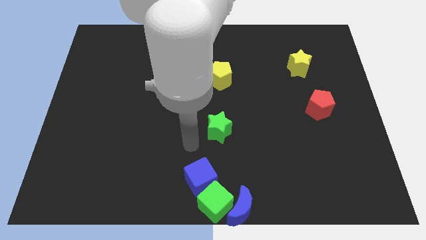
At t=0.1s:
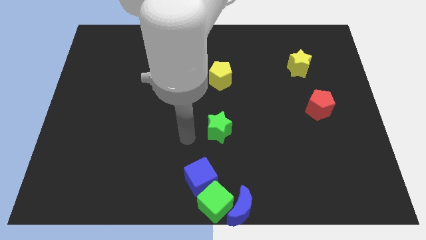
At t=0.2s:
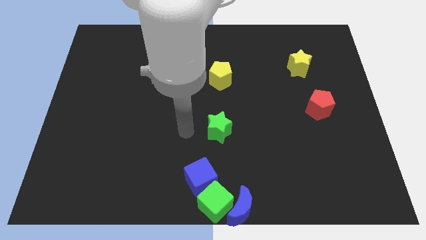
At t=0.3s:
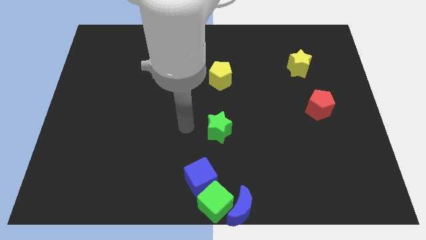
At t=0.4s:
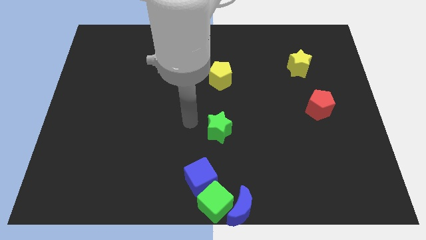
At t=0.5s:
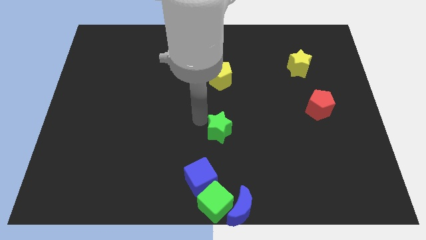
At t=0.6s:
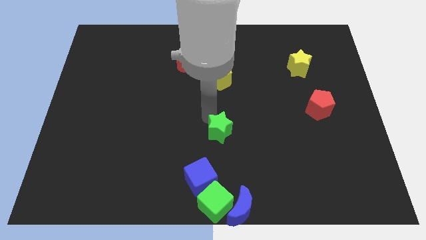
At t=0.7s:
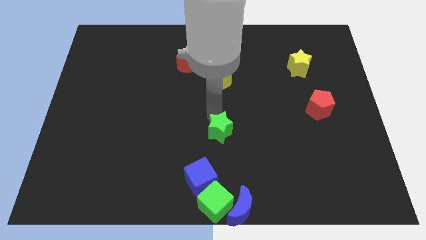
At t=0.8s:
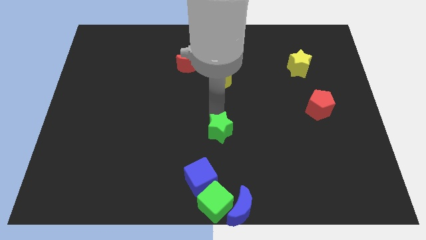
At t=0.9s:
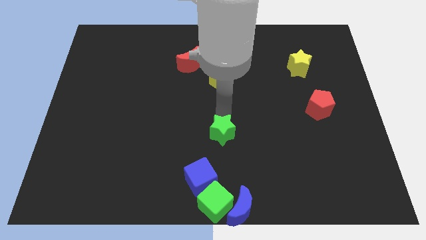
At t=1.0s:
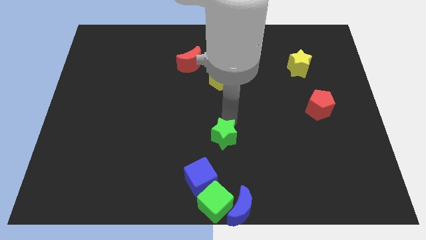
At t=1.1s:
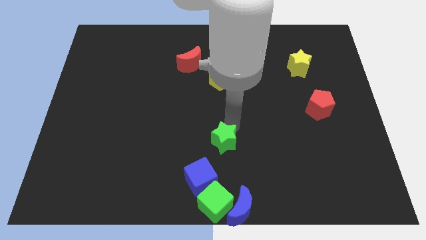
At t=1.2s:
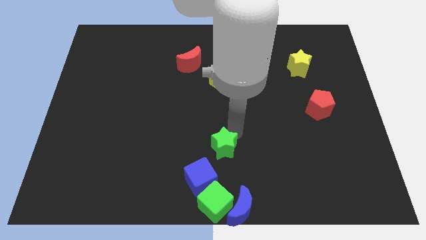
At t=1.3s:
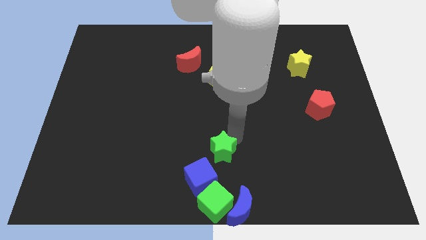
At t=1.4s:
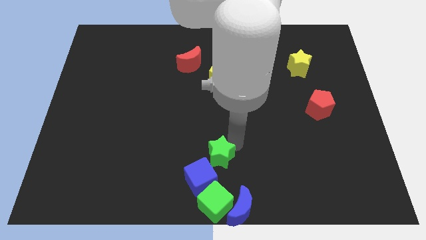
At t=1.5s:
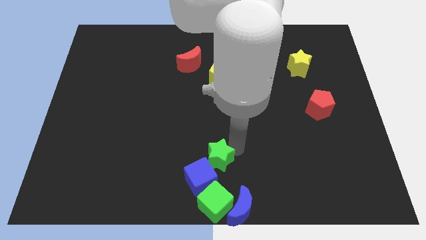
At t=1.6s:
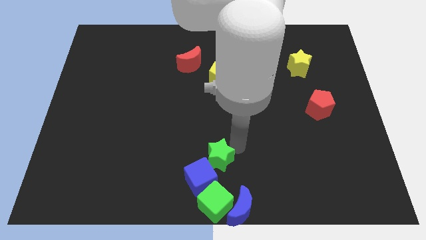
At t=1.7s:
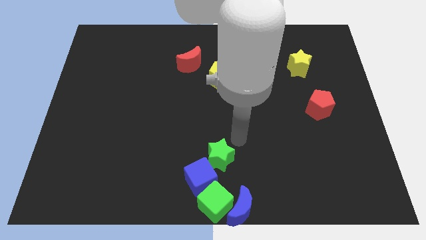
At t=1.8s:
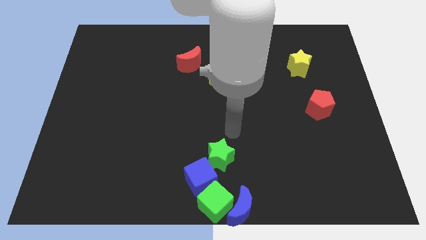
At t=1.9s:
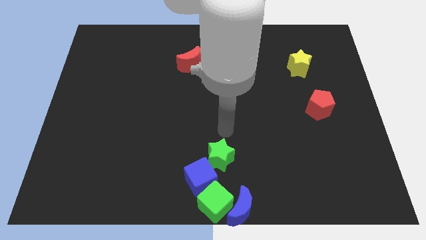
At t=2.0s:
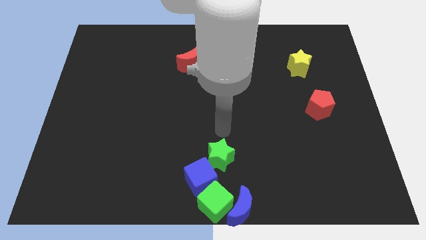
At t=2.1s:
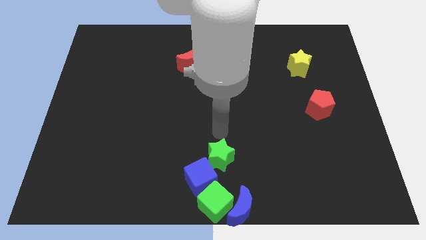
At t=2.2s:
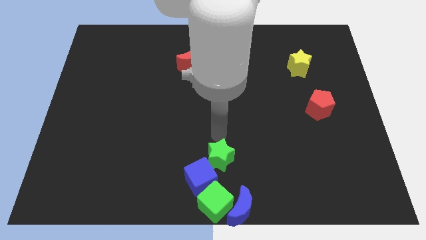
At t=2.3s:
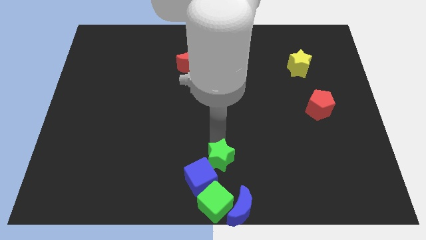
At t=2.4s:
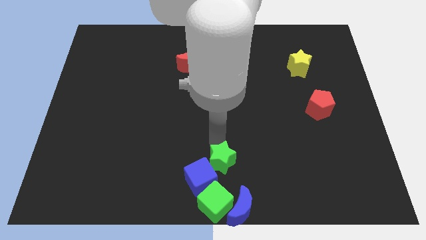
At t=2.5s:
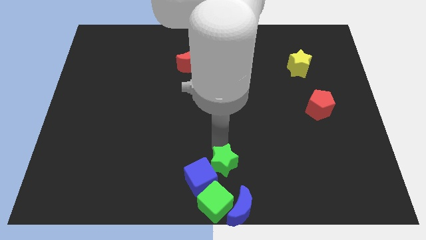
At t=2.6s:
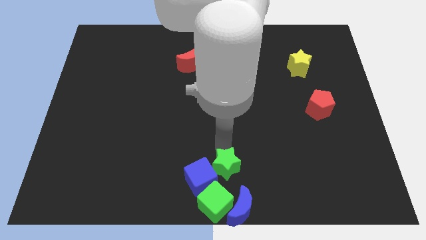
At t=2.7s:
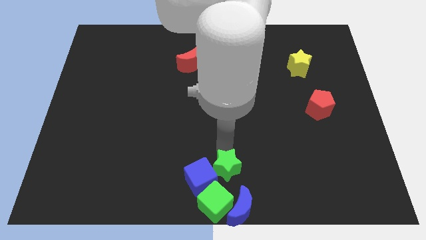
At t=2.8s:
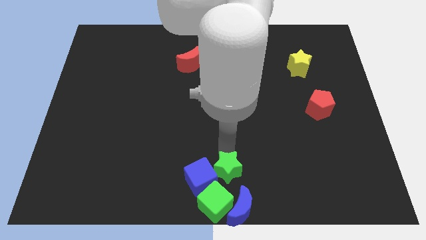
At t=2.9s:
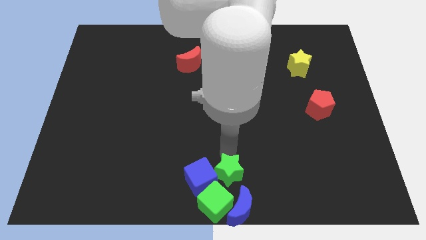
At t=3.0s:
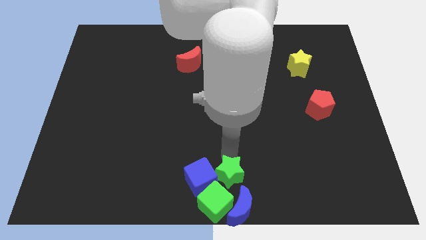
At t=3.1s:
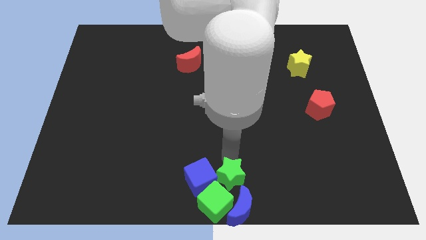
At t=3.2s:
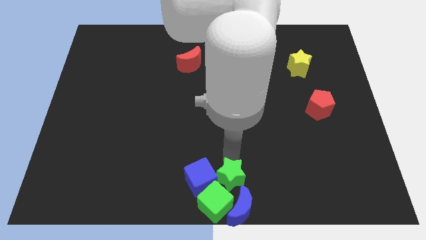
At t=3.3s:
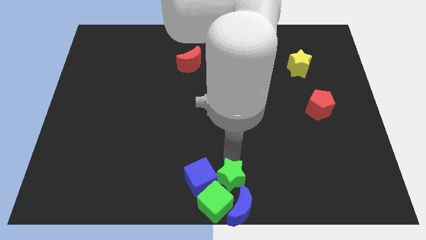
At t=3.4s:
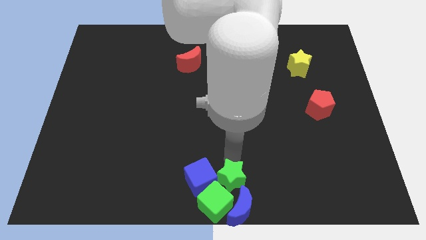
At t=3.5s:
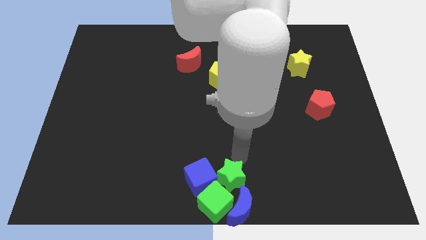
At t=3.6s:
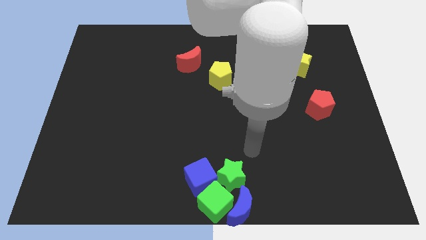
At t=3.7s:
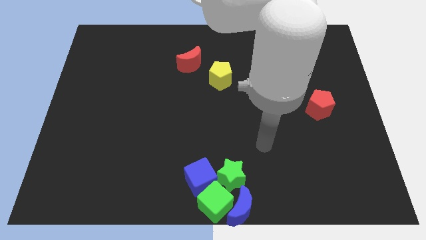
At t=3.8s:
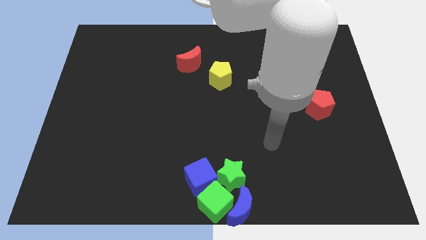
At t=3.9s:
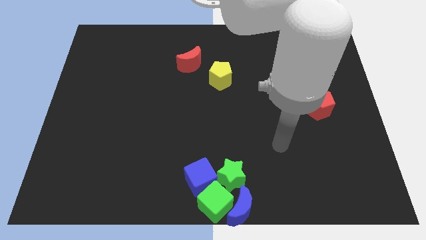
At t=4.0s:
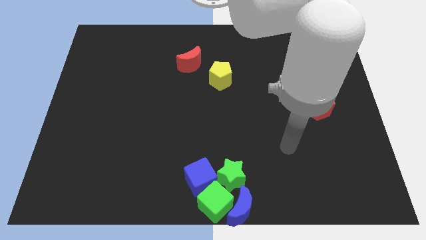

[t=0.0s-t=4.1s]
place green star to the right of blue cube

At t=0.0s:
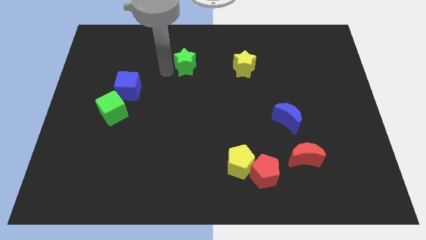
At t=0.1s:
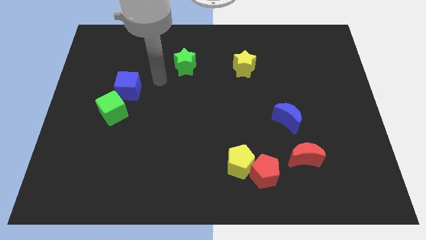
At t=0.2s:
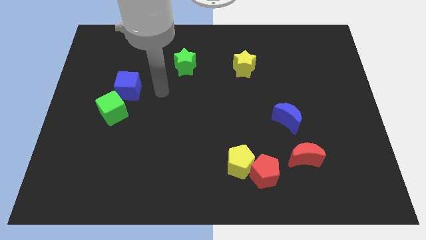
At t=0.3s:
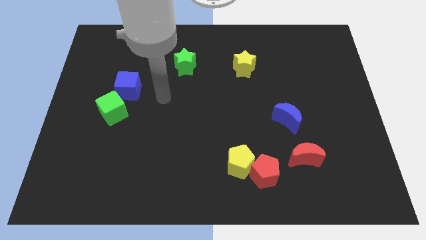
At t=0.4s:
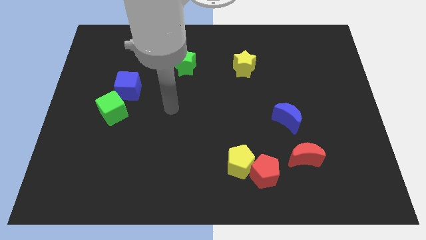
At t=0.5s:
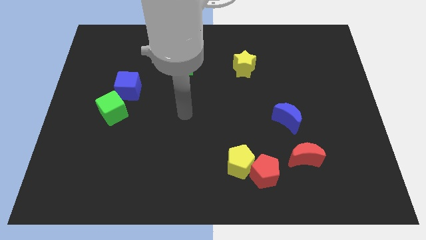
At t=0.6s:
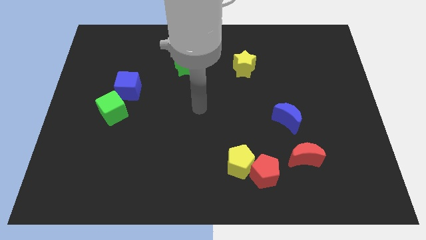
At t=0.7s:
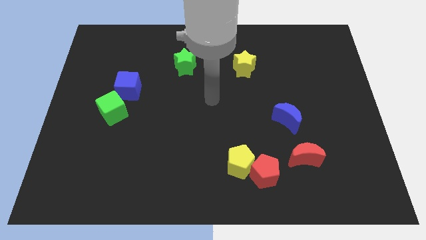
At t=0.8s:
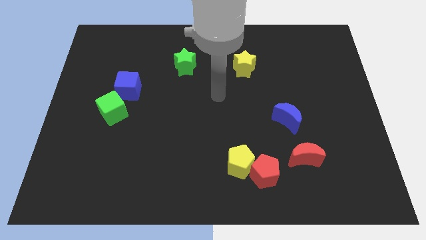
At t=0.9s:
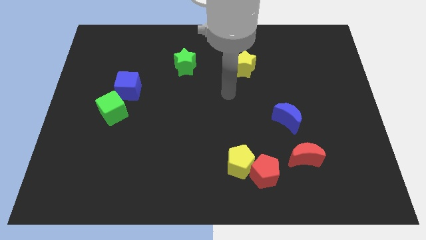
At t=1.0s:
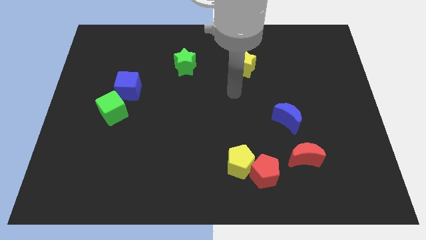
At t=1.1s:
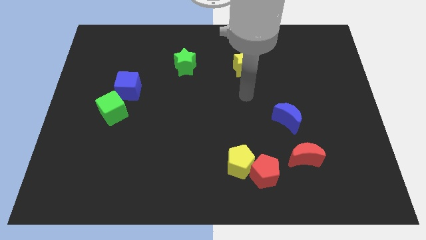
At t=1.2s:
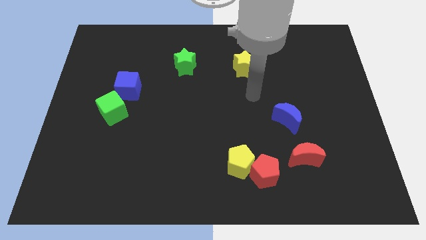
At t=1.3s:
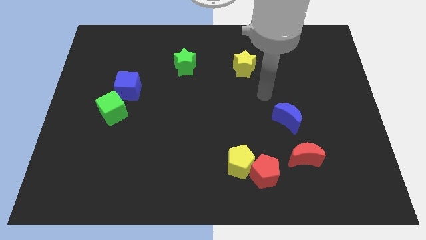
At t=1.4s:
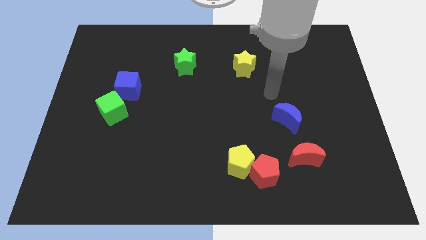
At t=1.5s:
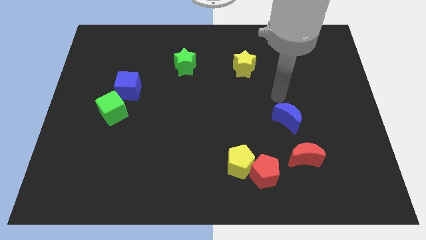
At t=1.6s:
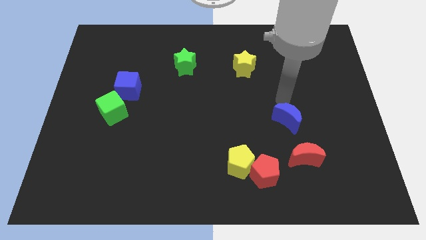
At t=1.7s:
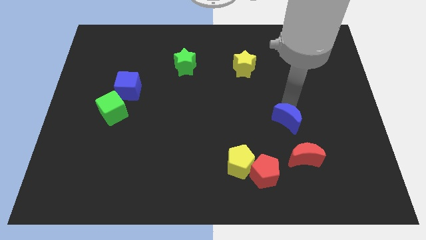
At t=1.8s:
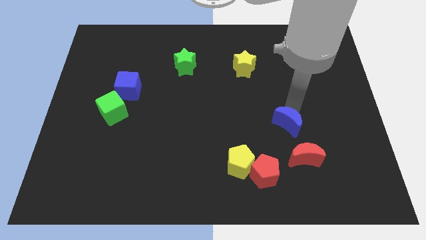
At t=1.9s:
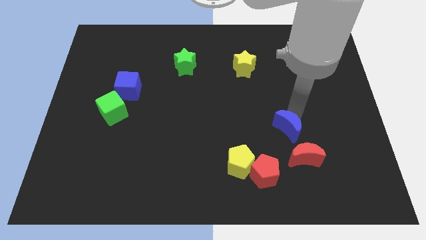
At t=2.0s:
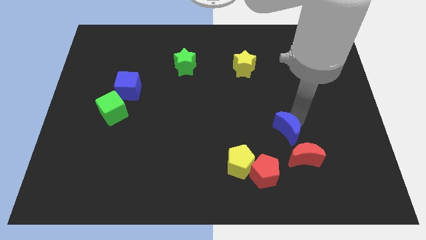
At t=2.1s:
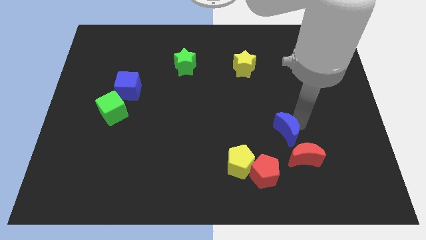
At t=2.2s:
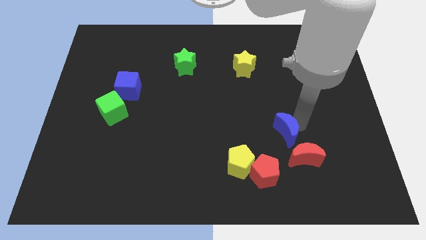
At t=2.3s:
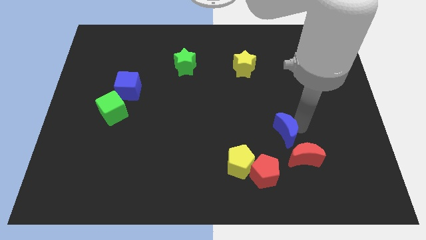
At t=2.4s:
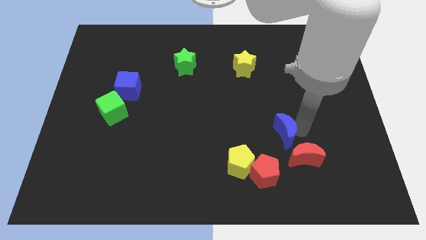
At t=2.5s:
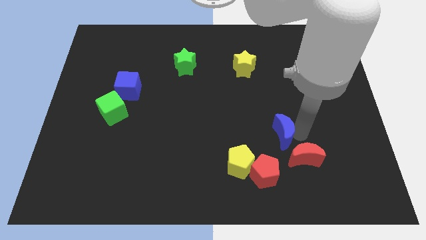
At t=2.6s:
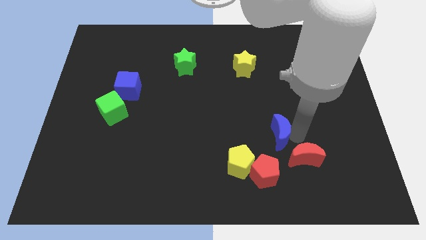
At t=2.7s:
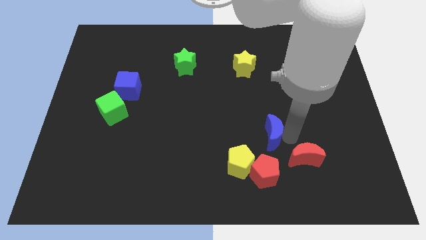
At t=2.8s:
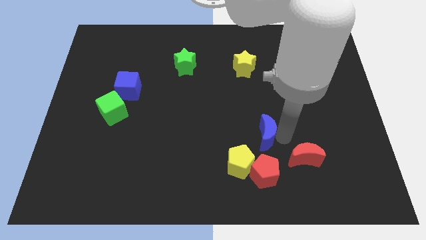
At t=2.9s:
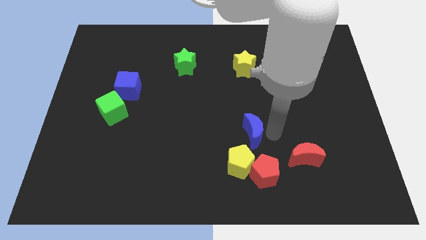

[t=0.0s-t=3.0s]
put the blue crescent above the red pentagon

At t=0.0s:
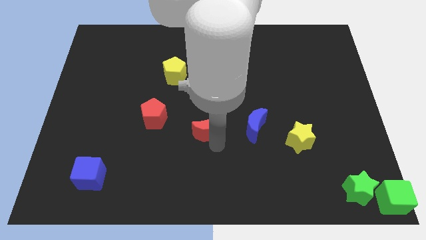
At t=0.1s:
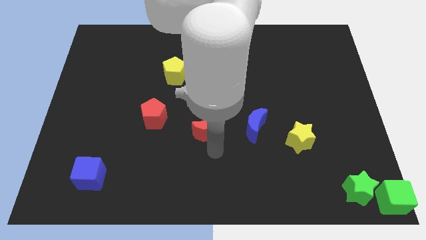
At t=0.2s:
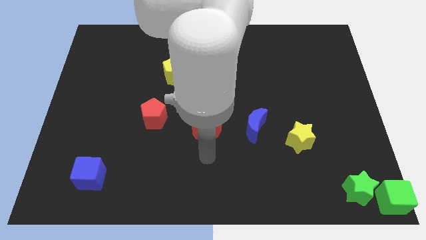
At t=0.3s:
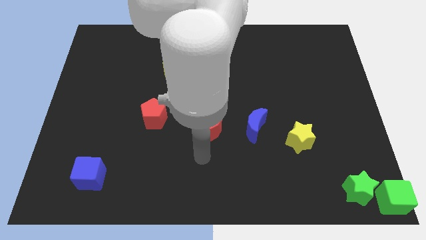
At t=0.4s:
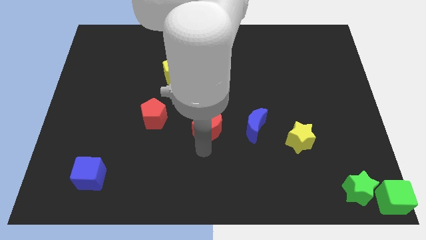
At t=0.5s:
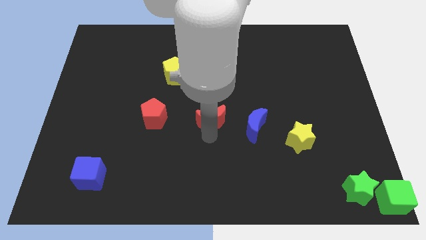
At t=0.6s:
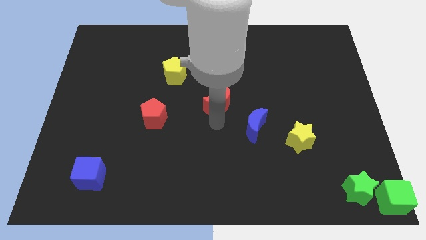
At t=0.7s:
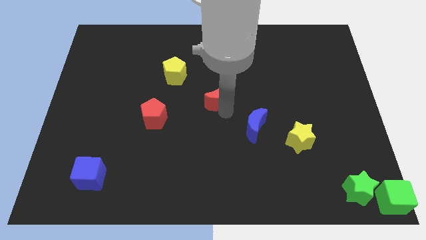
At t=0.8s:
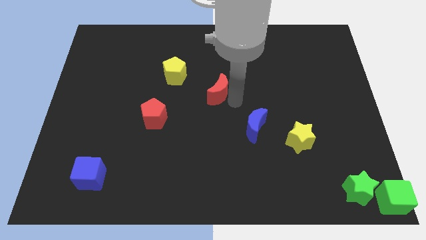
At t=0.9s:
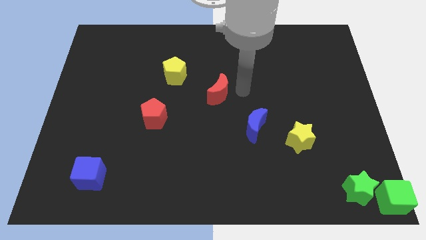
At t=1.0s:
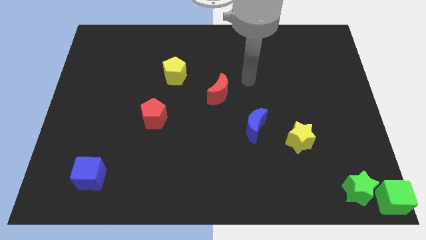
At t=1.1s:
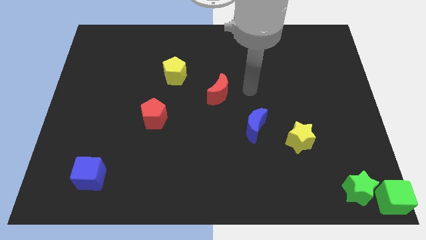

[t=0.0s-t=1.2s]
slide the red crescent slightly towards up

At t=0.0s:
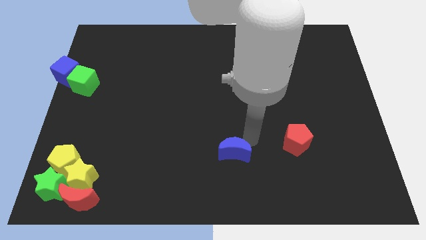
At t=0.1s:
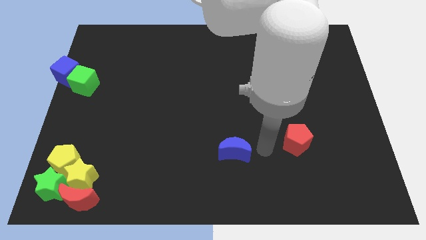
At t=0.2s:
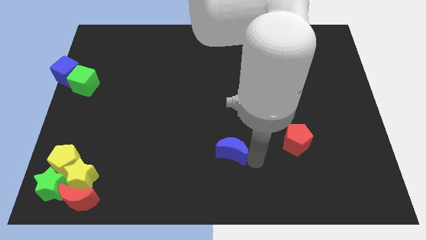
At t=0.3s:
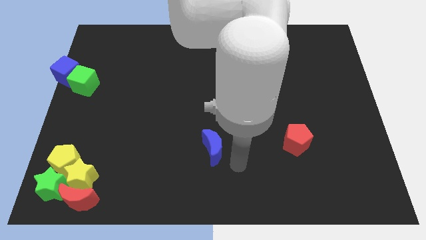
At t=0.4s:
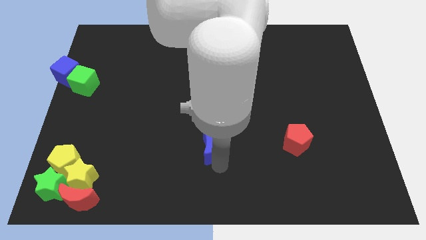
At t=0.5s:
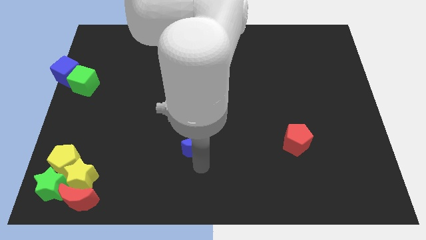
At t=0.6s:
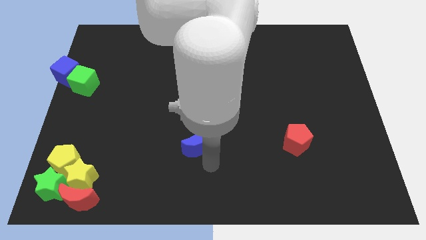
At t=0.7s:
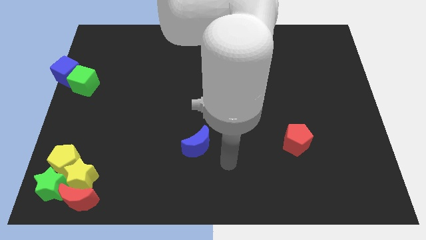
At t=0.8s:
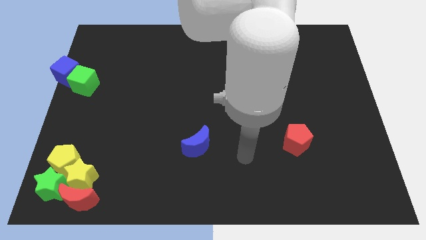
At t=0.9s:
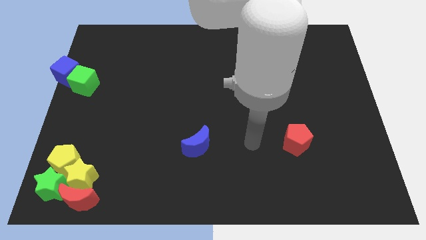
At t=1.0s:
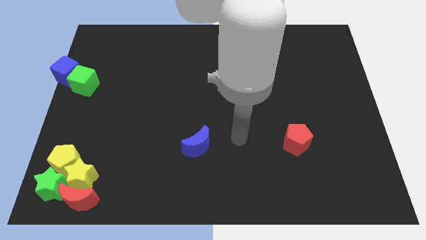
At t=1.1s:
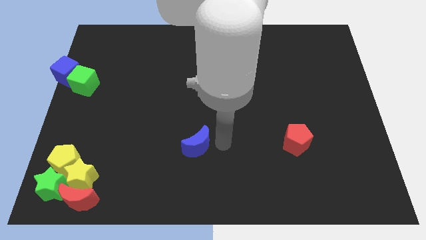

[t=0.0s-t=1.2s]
push the blue crescent slightly towards the left side to the board
